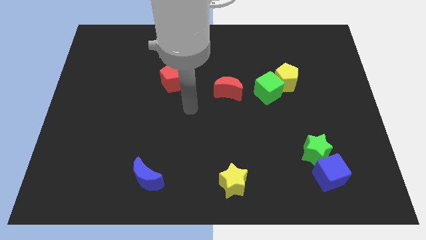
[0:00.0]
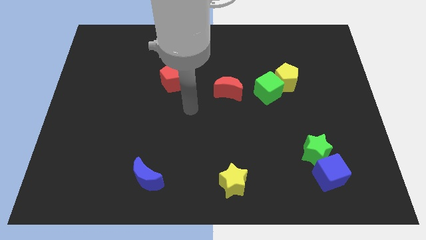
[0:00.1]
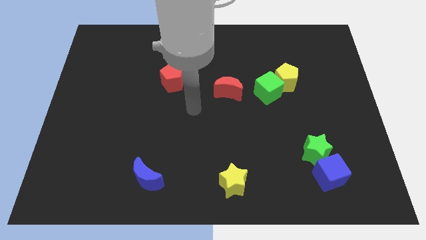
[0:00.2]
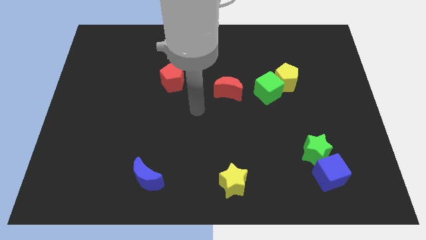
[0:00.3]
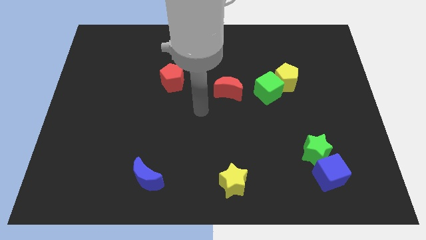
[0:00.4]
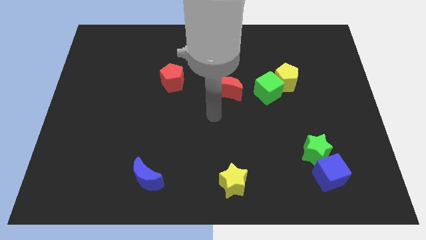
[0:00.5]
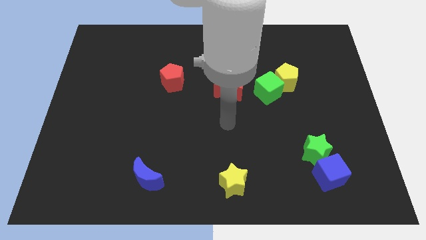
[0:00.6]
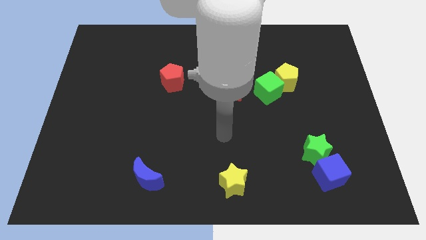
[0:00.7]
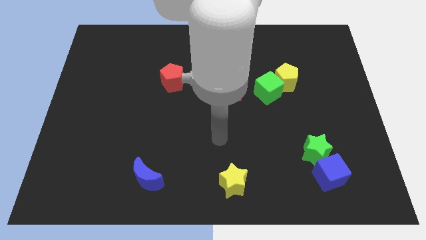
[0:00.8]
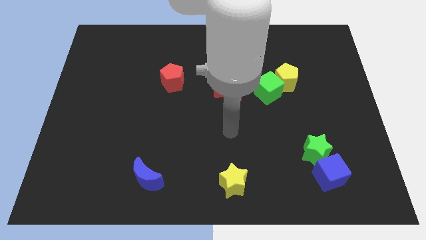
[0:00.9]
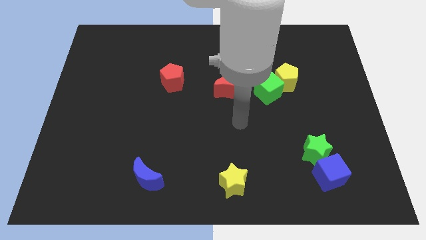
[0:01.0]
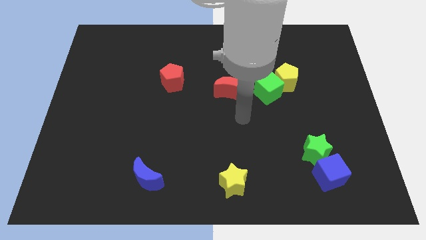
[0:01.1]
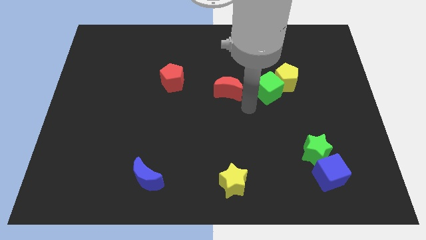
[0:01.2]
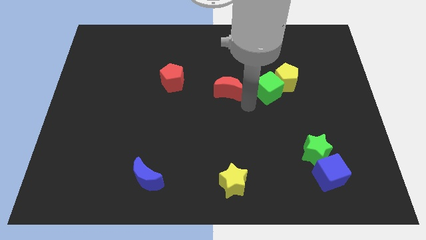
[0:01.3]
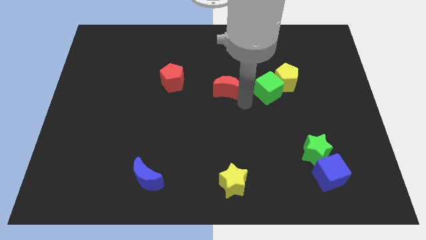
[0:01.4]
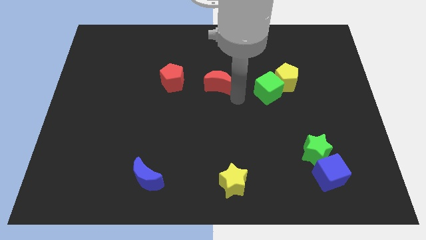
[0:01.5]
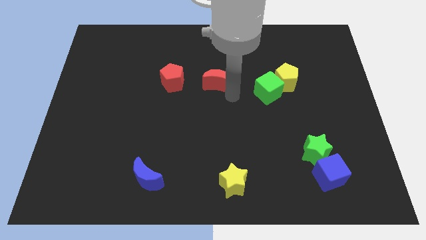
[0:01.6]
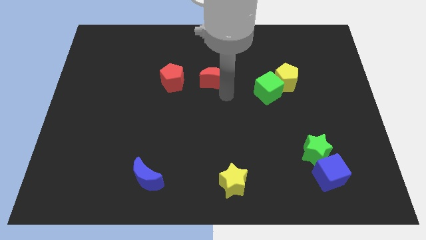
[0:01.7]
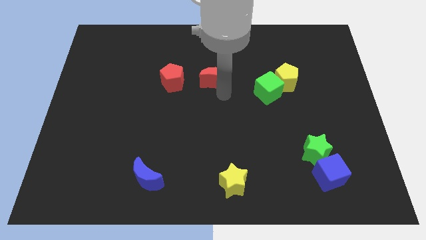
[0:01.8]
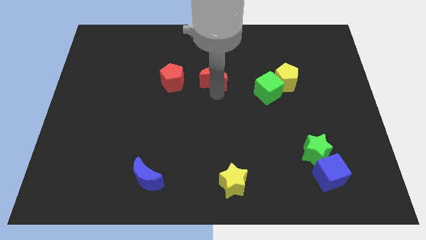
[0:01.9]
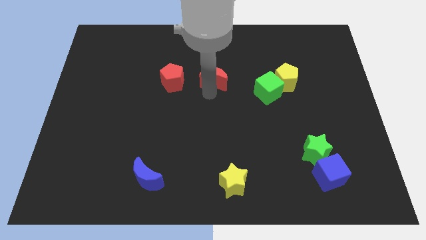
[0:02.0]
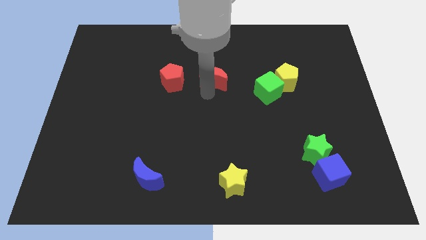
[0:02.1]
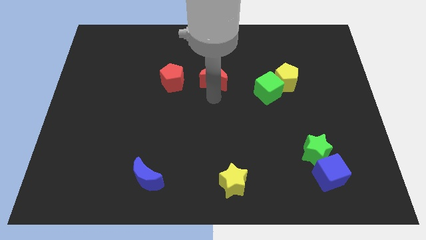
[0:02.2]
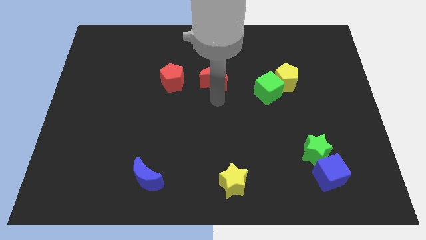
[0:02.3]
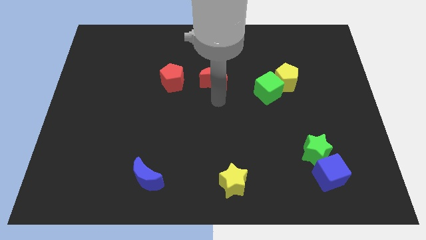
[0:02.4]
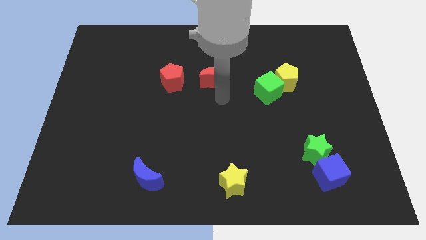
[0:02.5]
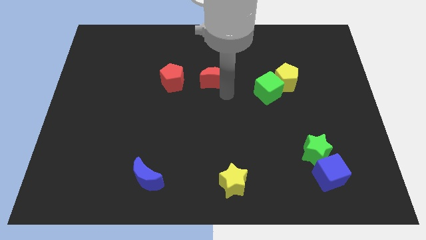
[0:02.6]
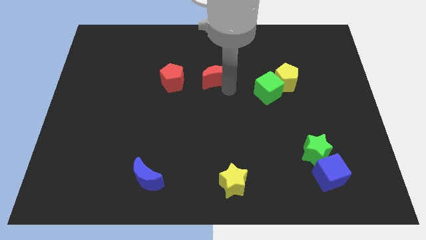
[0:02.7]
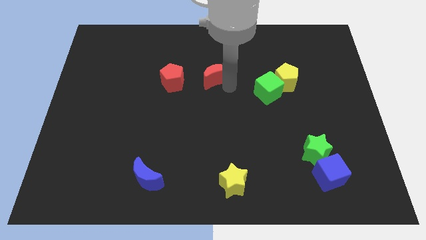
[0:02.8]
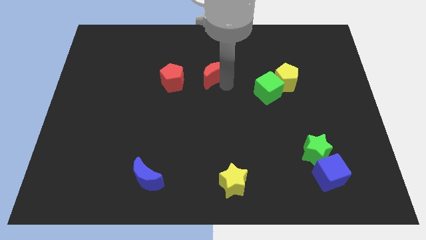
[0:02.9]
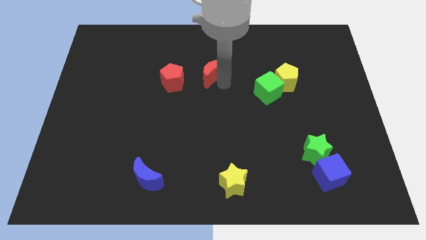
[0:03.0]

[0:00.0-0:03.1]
place red crescent right to the red pentagon

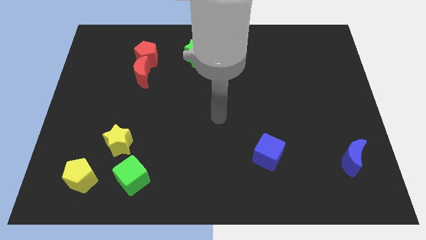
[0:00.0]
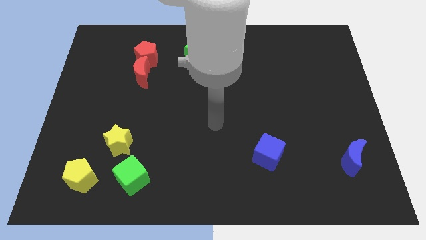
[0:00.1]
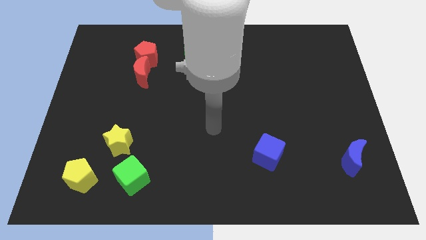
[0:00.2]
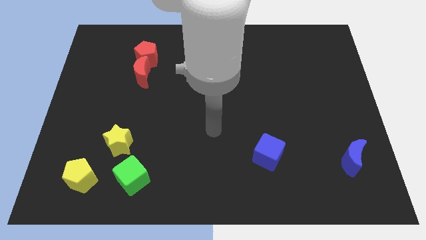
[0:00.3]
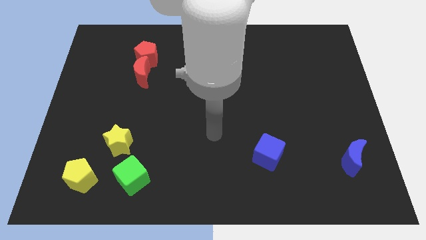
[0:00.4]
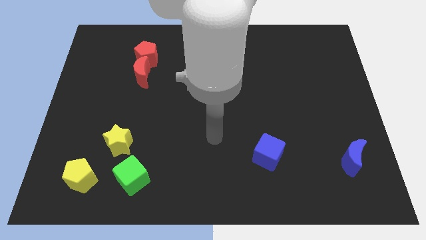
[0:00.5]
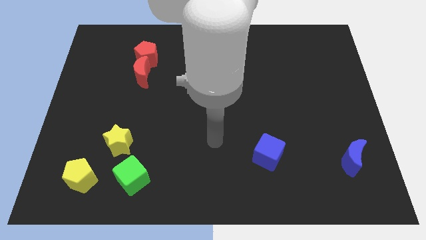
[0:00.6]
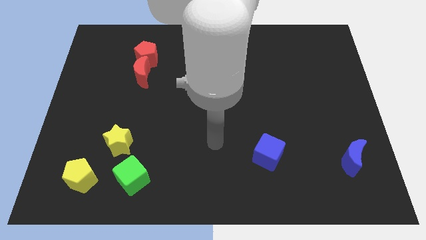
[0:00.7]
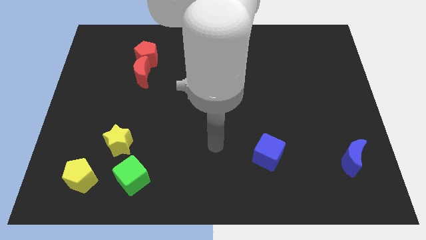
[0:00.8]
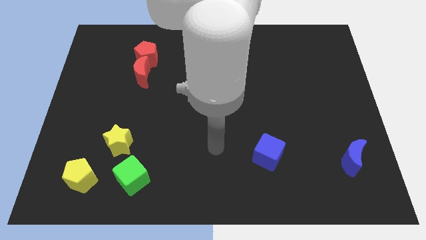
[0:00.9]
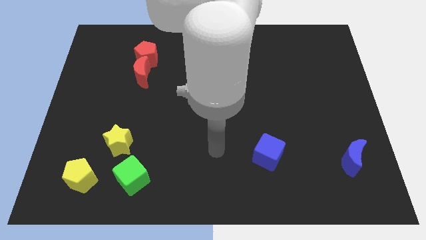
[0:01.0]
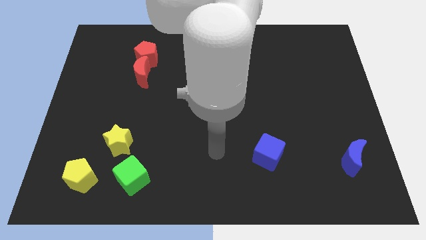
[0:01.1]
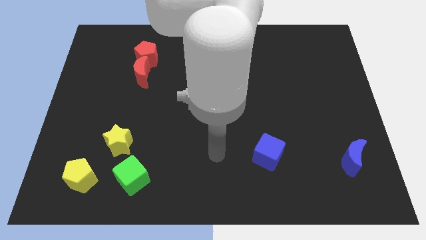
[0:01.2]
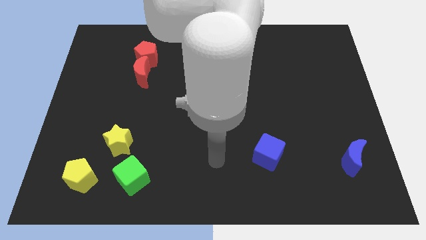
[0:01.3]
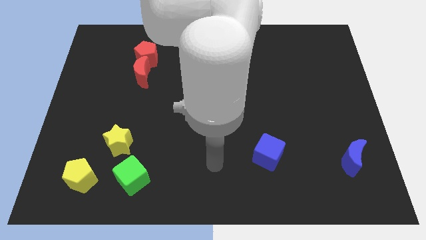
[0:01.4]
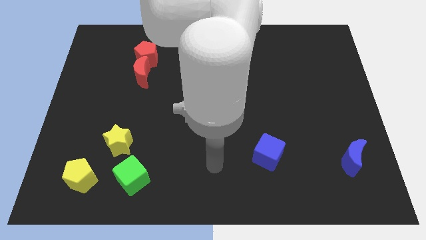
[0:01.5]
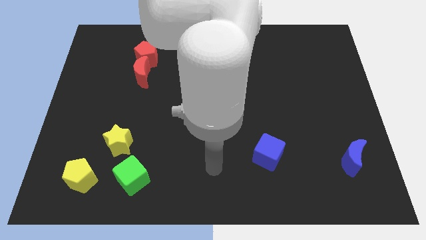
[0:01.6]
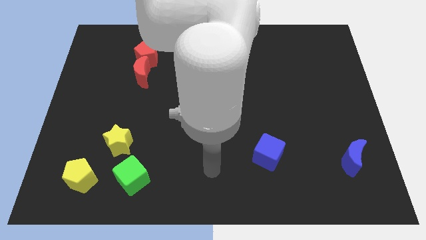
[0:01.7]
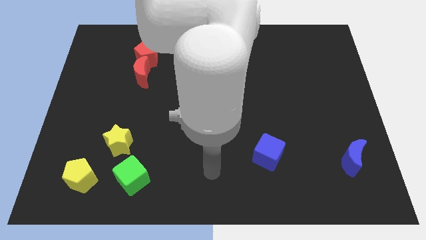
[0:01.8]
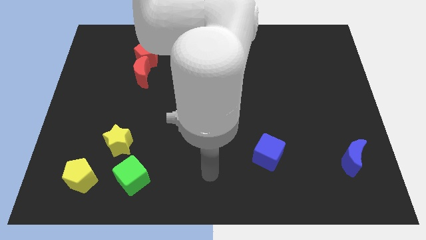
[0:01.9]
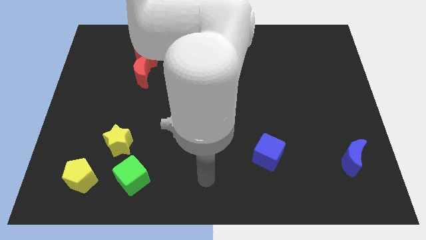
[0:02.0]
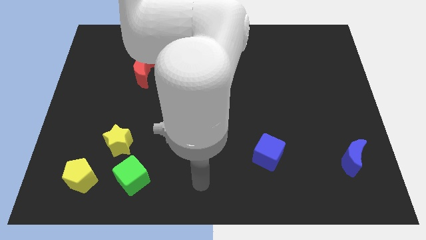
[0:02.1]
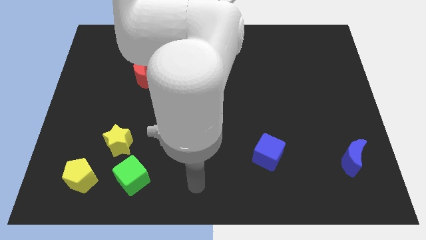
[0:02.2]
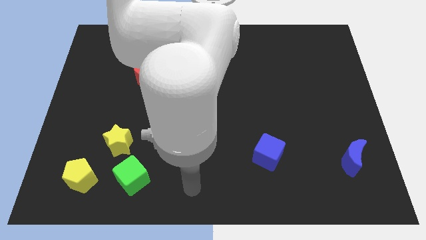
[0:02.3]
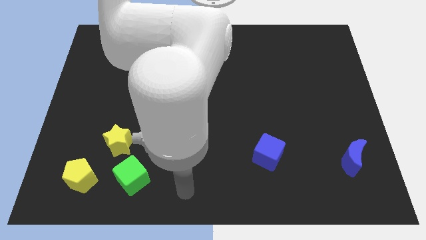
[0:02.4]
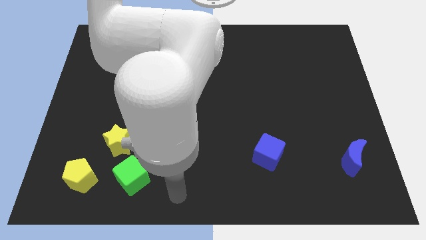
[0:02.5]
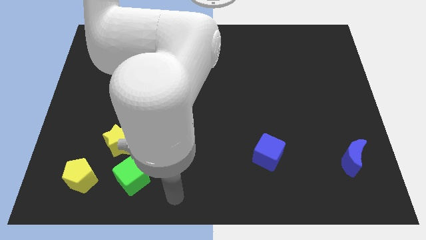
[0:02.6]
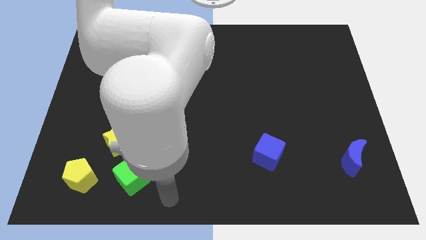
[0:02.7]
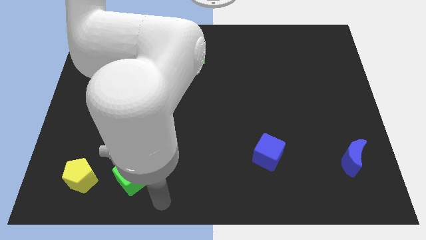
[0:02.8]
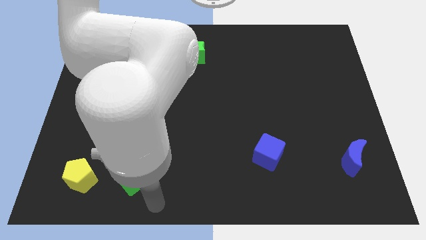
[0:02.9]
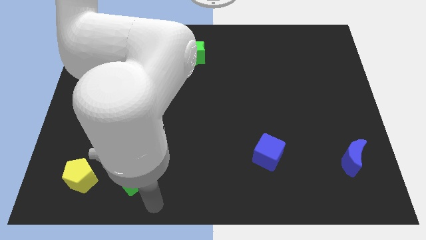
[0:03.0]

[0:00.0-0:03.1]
move your arm and point at the bottom of green cube

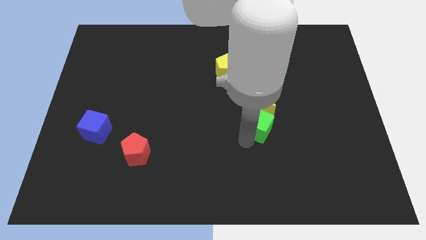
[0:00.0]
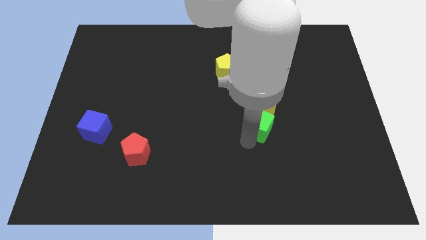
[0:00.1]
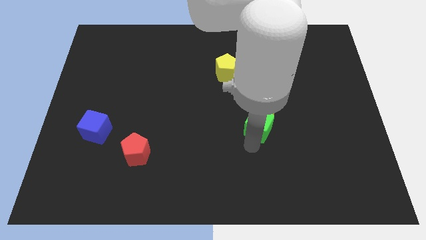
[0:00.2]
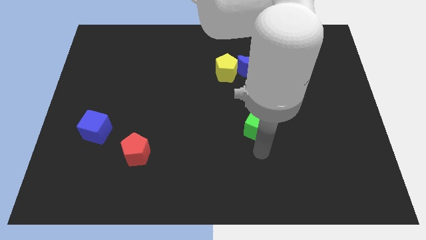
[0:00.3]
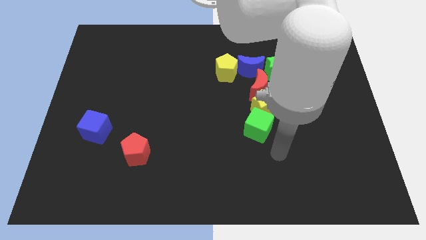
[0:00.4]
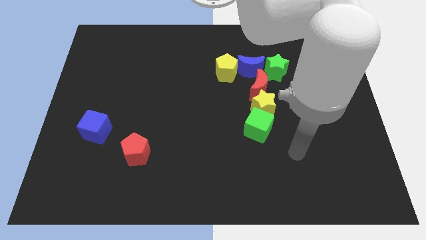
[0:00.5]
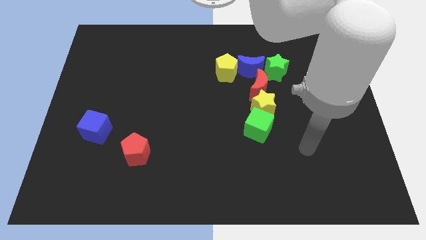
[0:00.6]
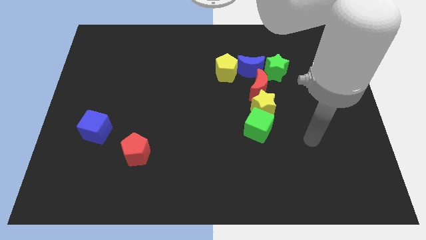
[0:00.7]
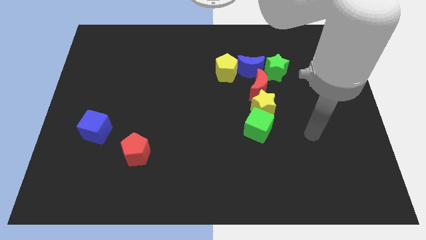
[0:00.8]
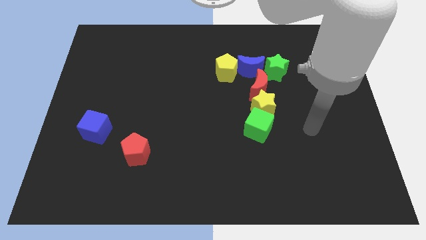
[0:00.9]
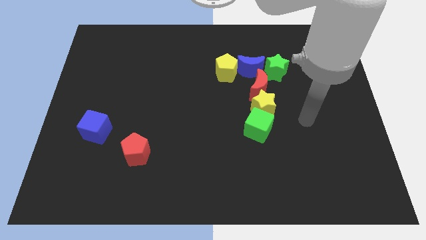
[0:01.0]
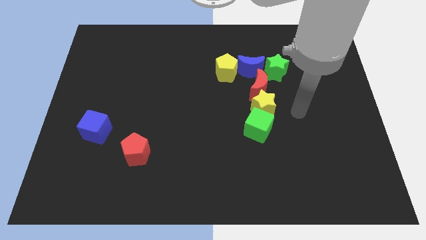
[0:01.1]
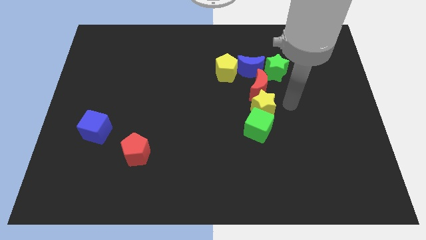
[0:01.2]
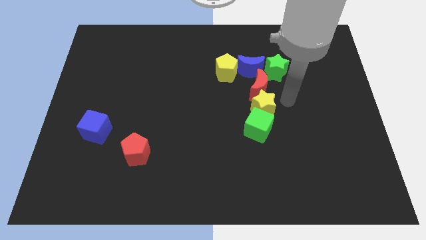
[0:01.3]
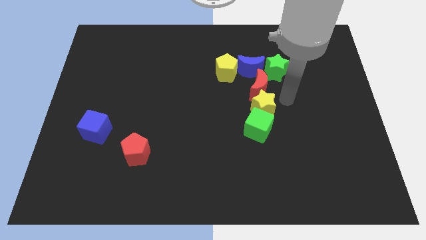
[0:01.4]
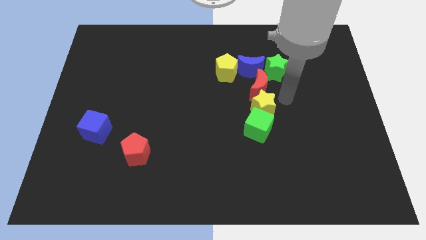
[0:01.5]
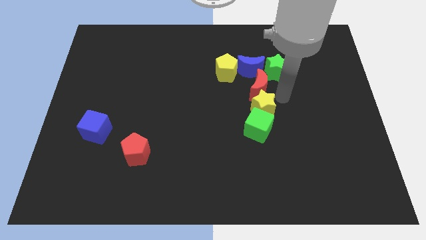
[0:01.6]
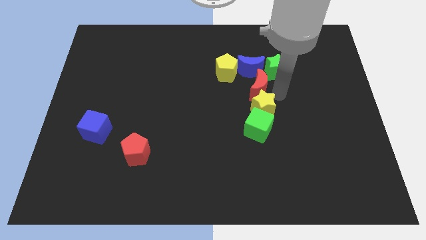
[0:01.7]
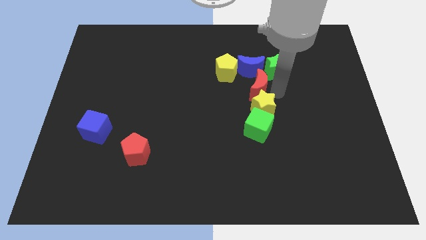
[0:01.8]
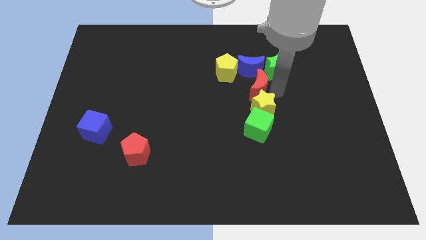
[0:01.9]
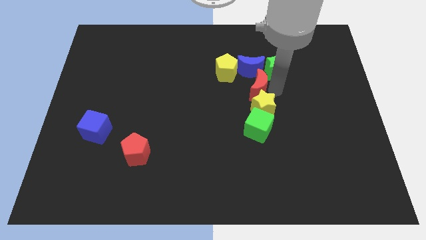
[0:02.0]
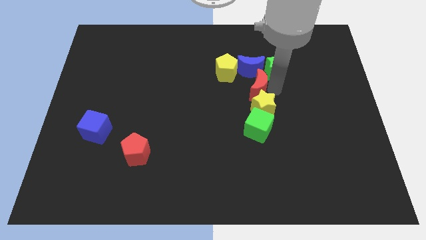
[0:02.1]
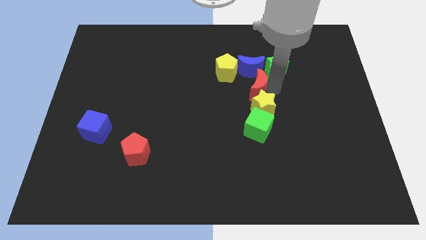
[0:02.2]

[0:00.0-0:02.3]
drag your arm to the right side of the red moon
